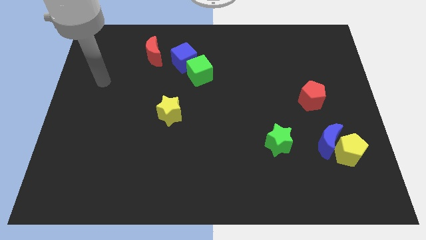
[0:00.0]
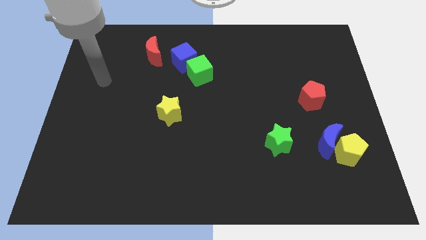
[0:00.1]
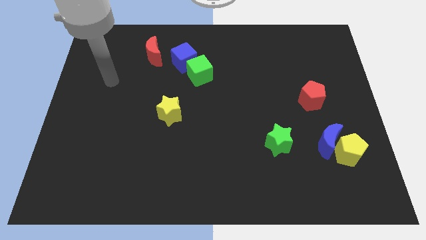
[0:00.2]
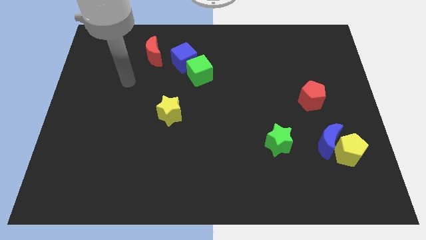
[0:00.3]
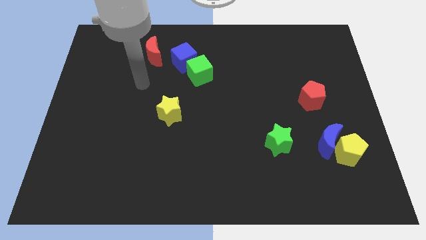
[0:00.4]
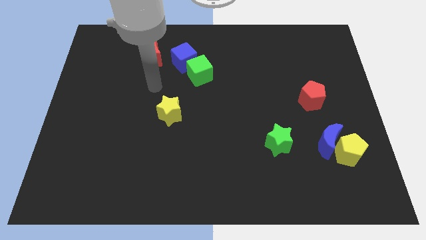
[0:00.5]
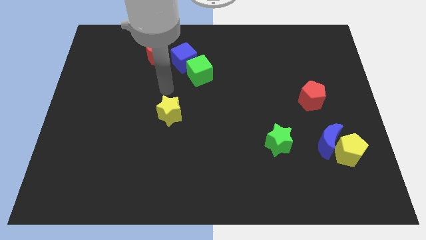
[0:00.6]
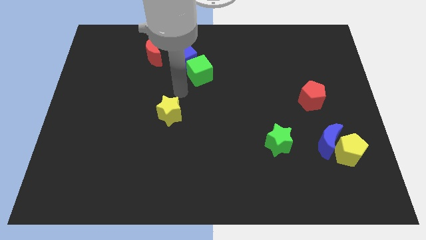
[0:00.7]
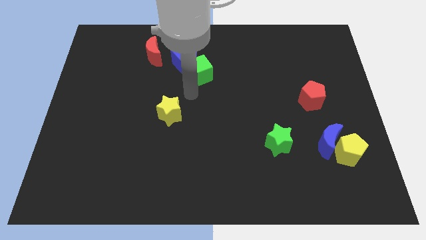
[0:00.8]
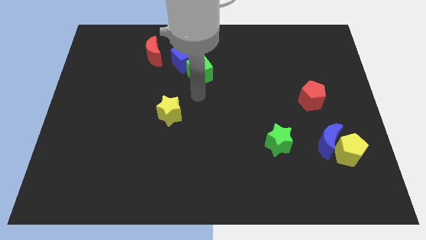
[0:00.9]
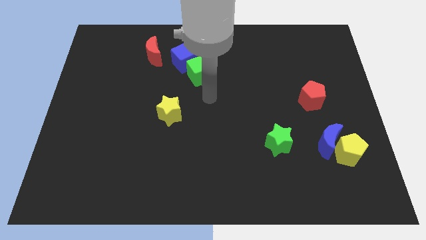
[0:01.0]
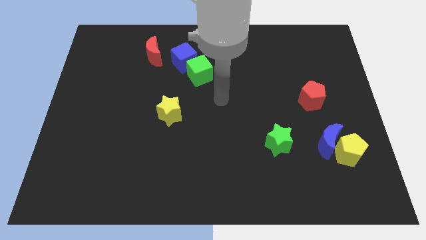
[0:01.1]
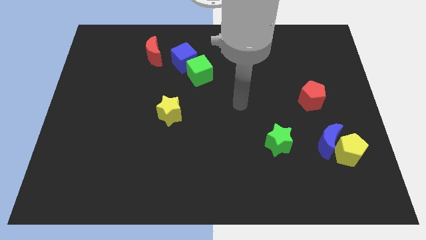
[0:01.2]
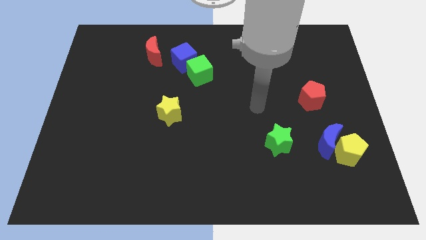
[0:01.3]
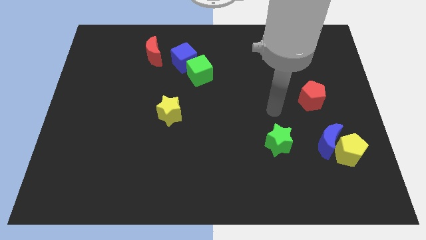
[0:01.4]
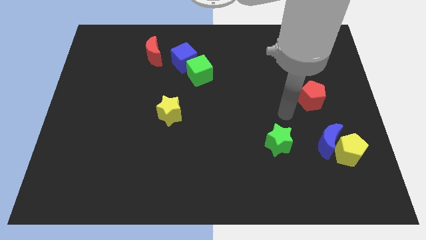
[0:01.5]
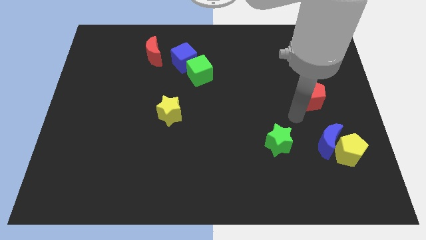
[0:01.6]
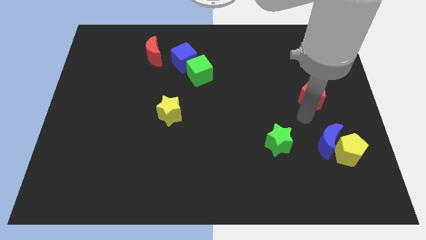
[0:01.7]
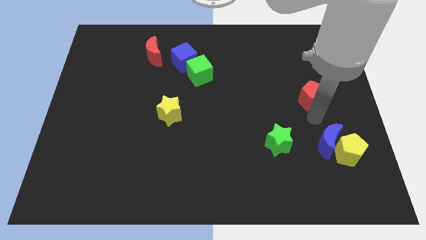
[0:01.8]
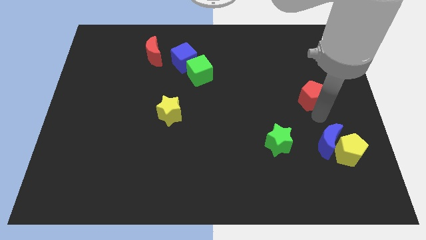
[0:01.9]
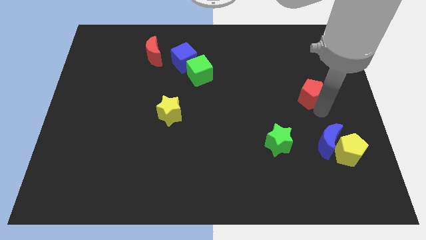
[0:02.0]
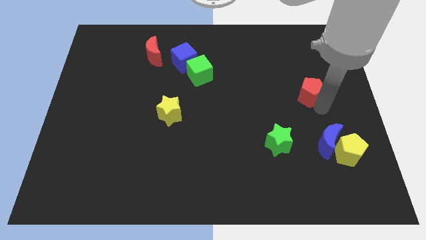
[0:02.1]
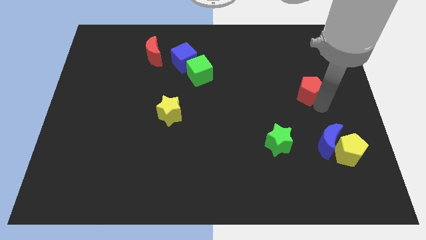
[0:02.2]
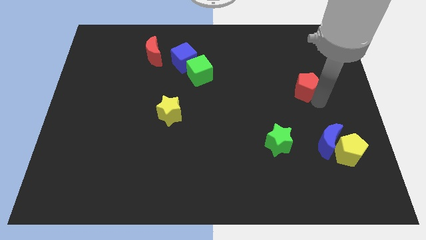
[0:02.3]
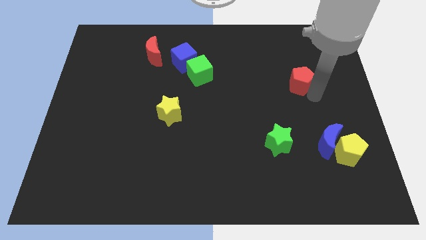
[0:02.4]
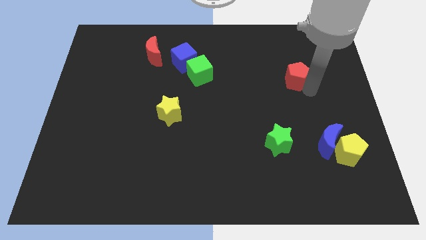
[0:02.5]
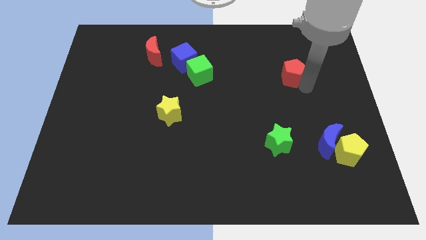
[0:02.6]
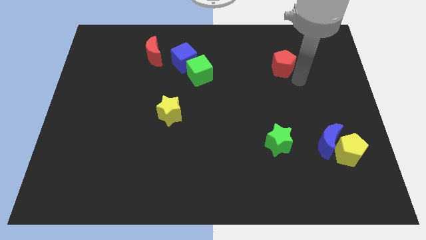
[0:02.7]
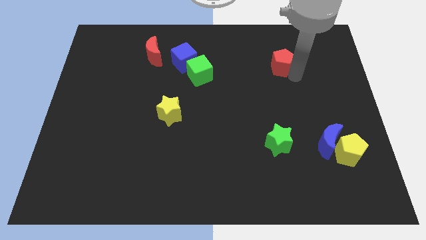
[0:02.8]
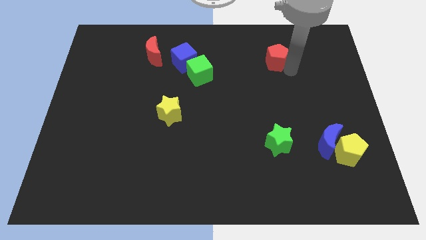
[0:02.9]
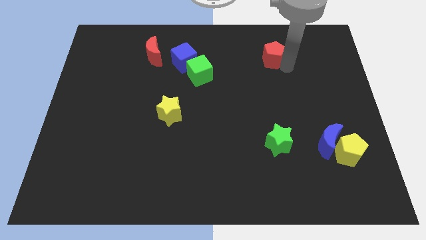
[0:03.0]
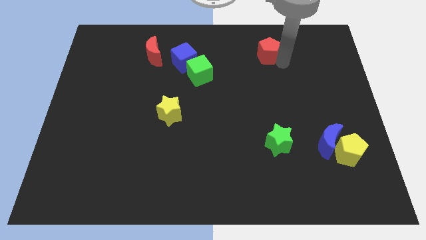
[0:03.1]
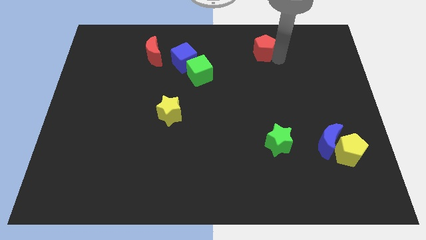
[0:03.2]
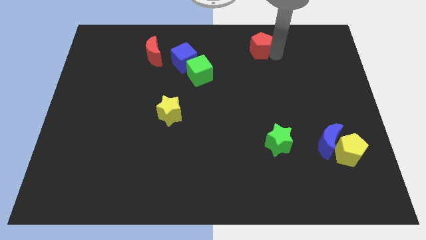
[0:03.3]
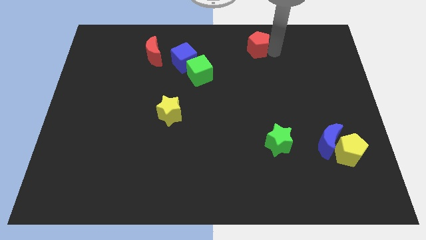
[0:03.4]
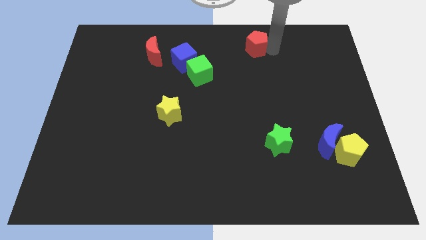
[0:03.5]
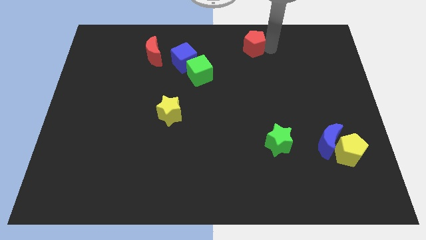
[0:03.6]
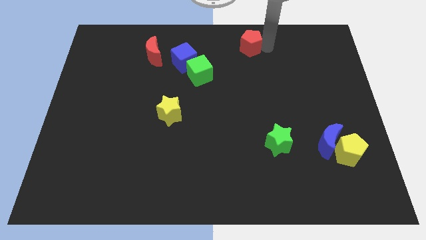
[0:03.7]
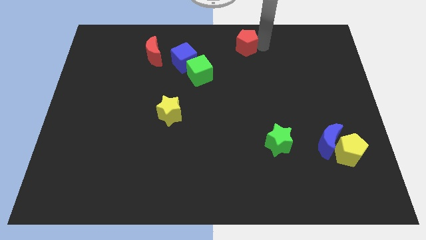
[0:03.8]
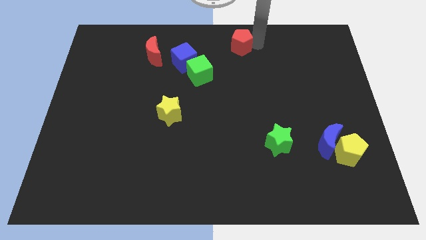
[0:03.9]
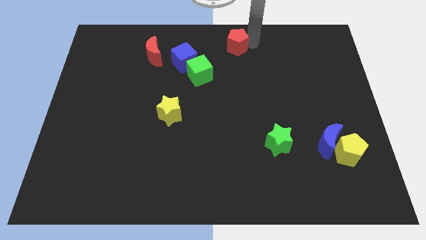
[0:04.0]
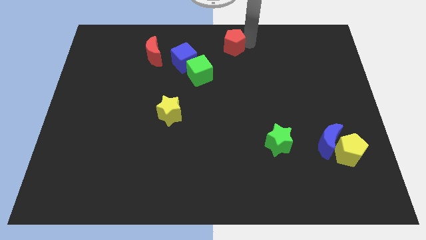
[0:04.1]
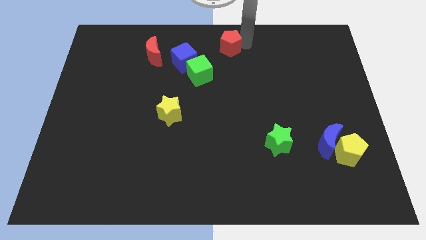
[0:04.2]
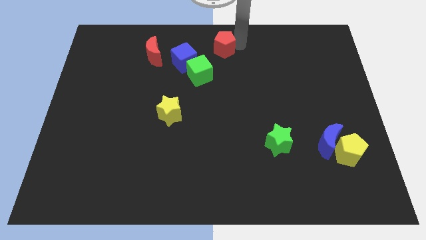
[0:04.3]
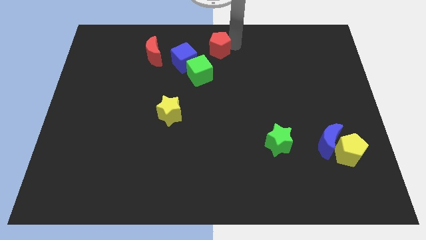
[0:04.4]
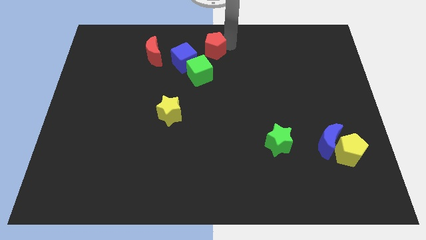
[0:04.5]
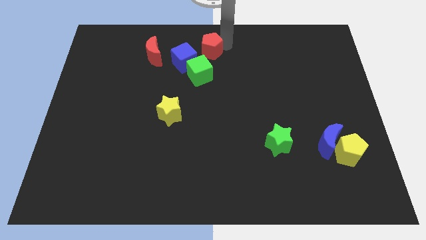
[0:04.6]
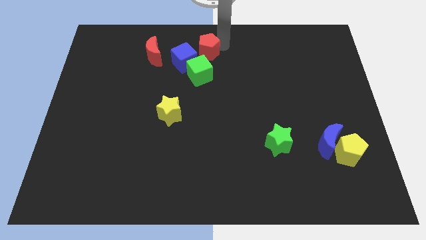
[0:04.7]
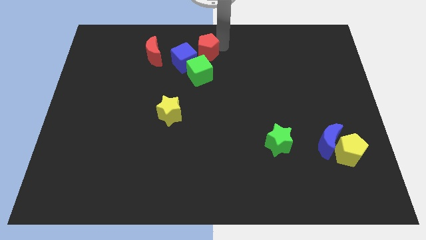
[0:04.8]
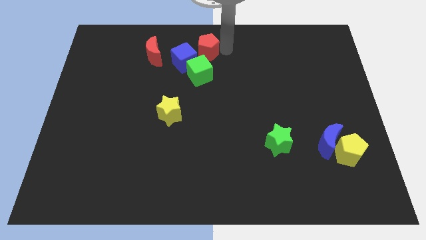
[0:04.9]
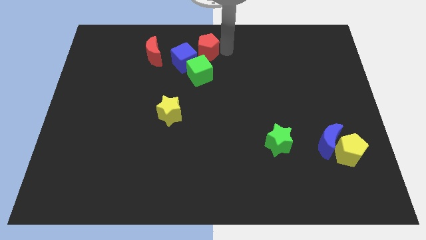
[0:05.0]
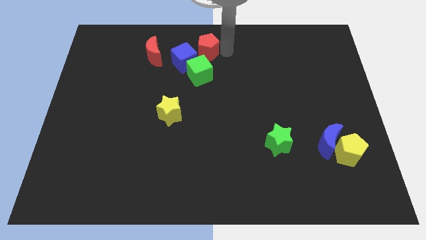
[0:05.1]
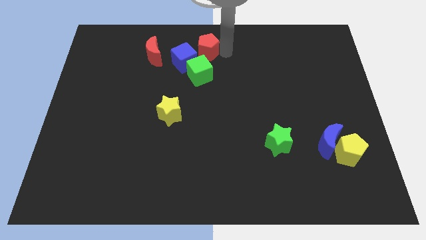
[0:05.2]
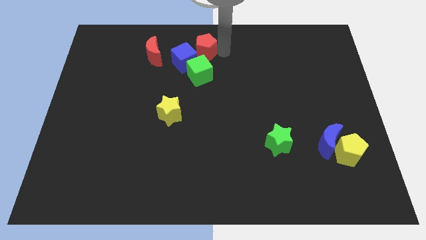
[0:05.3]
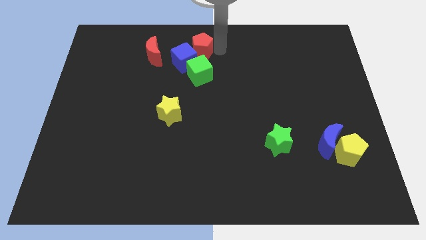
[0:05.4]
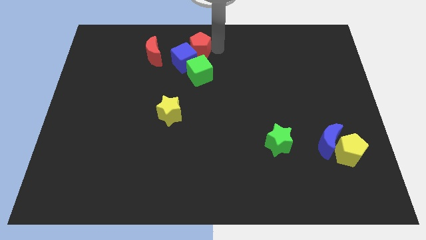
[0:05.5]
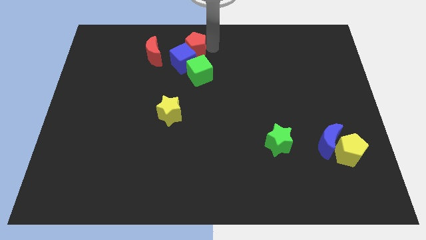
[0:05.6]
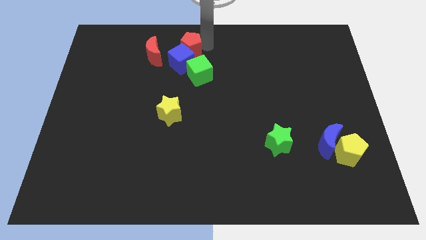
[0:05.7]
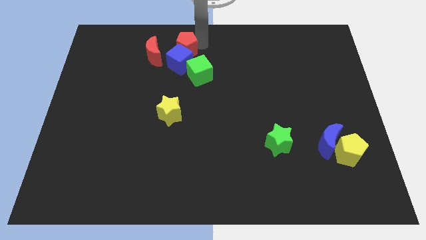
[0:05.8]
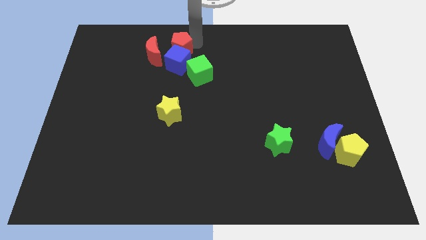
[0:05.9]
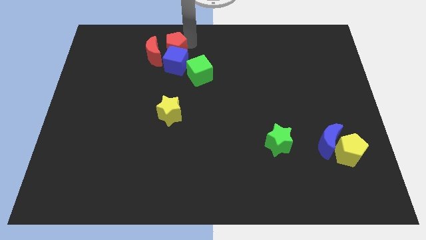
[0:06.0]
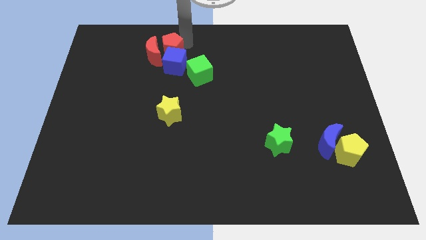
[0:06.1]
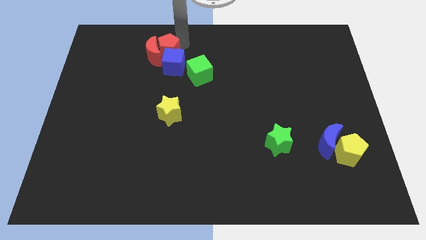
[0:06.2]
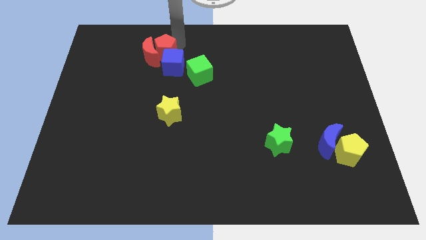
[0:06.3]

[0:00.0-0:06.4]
slide the red pentagon close to the red moon

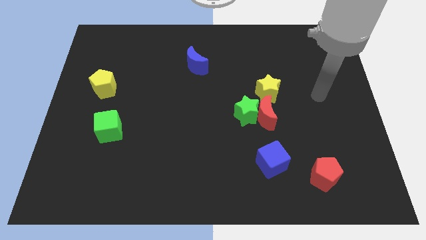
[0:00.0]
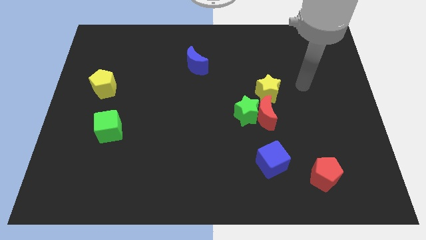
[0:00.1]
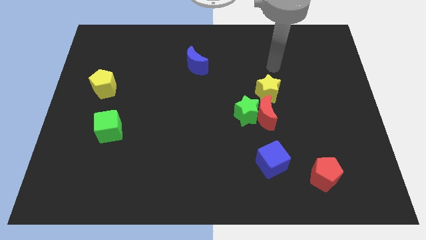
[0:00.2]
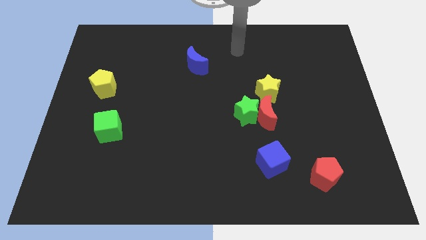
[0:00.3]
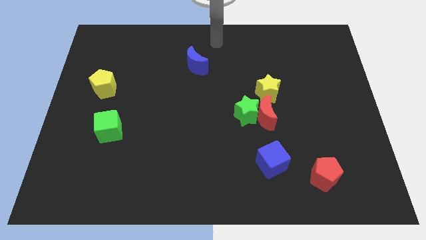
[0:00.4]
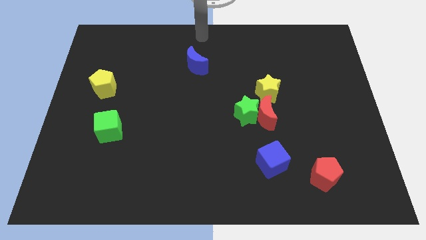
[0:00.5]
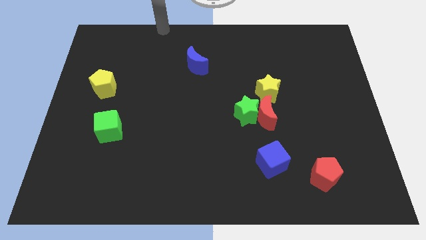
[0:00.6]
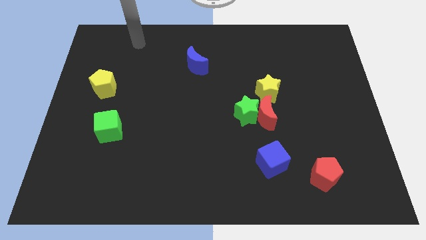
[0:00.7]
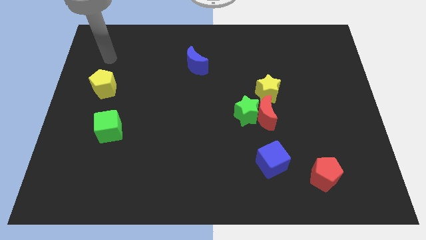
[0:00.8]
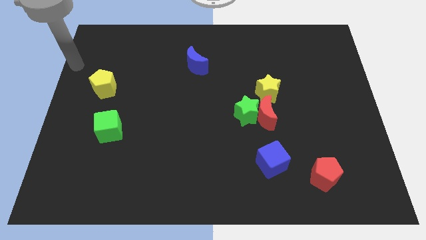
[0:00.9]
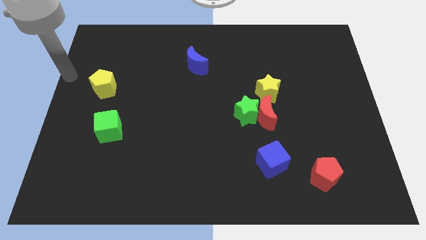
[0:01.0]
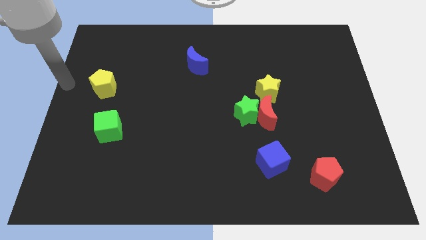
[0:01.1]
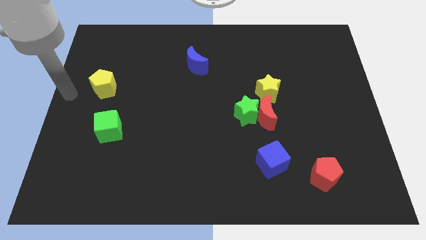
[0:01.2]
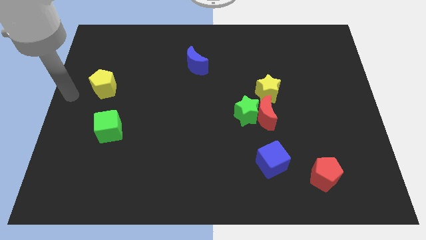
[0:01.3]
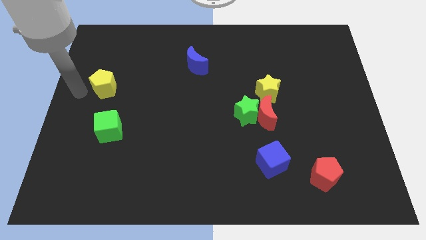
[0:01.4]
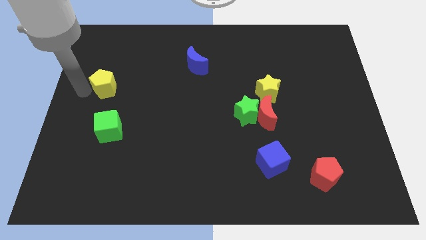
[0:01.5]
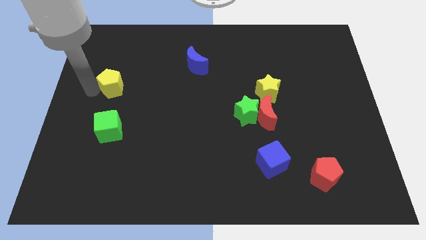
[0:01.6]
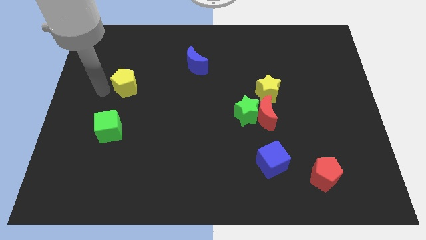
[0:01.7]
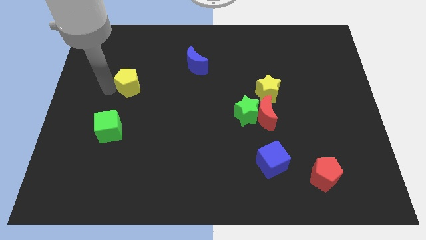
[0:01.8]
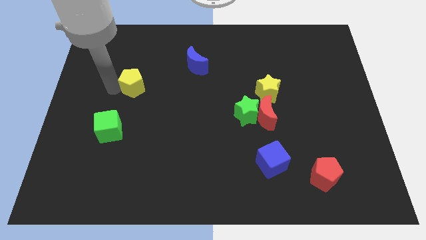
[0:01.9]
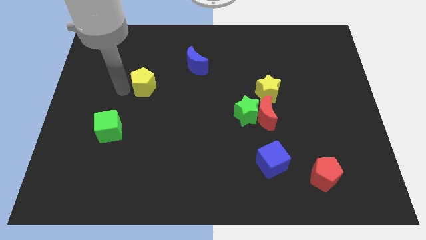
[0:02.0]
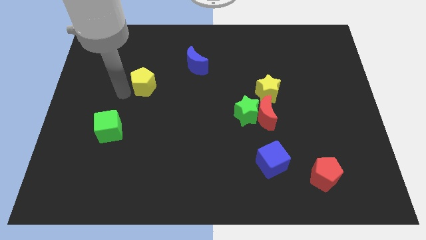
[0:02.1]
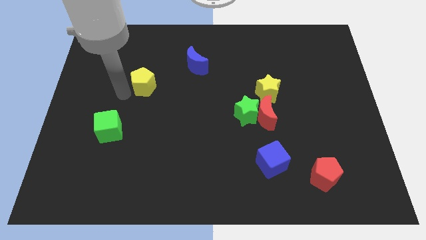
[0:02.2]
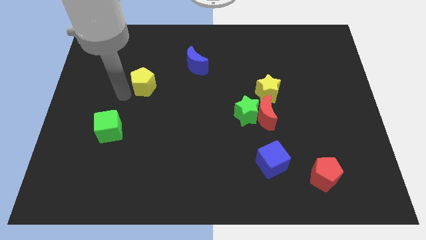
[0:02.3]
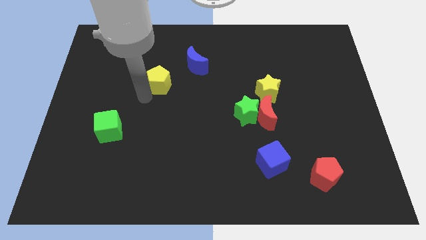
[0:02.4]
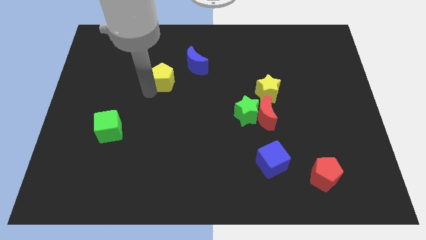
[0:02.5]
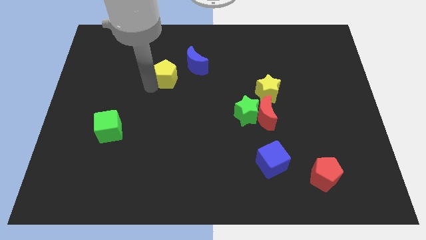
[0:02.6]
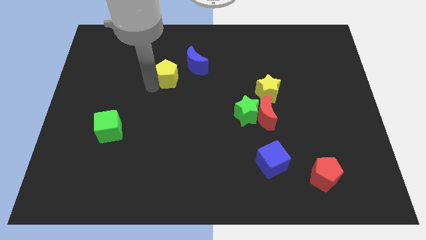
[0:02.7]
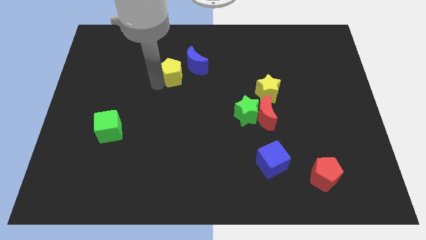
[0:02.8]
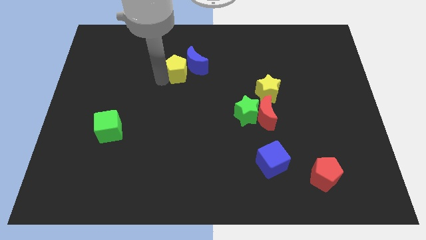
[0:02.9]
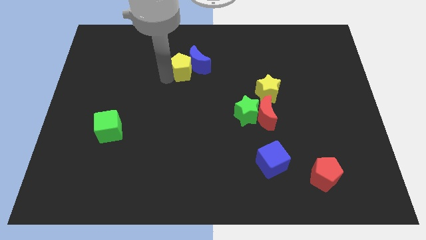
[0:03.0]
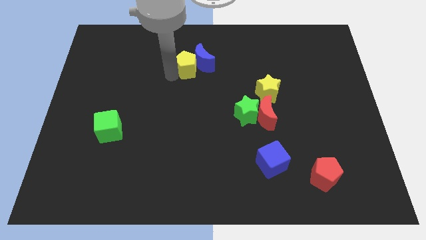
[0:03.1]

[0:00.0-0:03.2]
put the yellow pentagon to the blue moon
